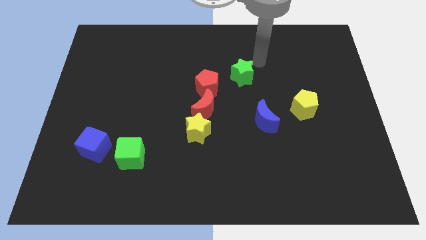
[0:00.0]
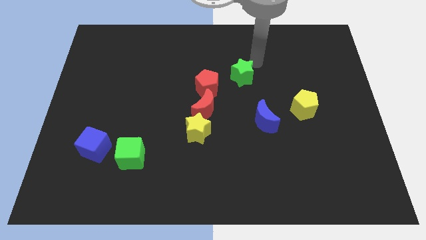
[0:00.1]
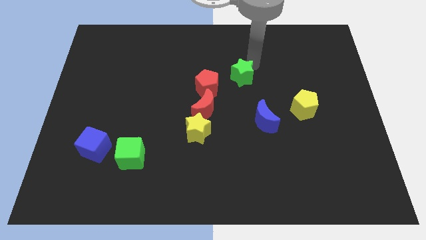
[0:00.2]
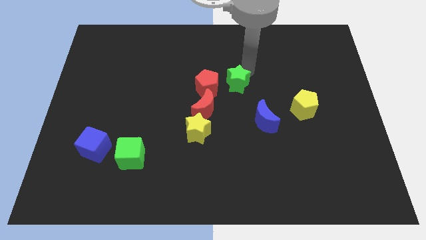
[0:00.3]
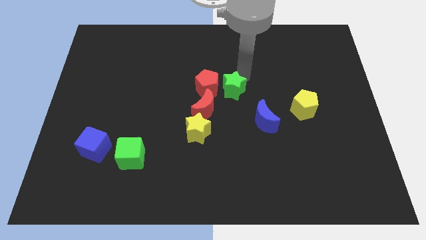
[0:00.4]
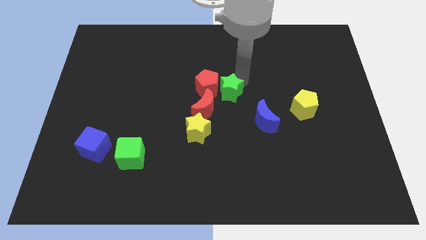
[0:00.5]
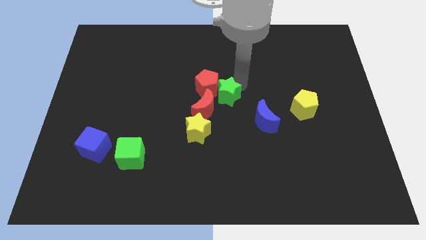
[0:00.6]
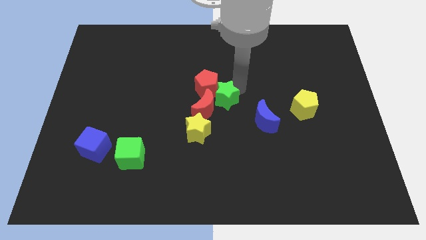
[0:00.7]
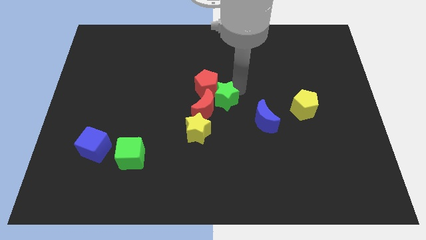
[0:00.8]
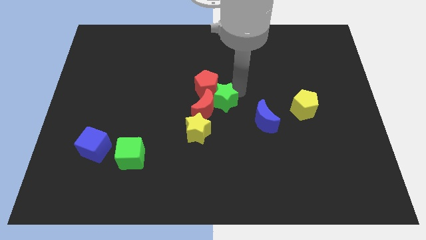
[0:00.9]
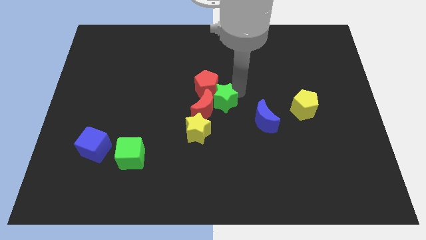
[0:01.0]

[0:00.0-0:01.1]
move the green star close to the right side of the group of red blocks

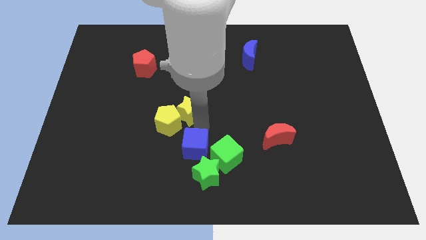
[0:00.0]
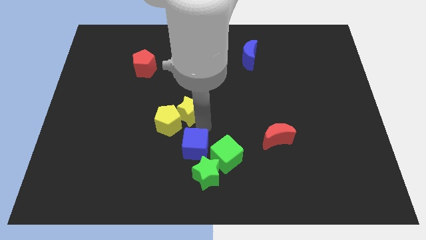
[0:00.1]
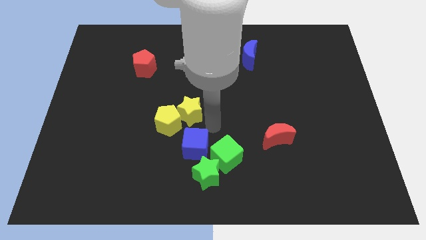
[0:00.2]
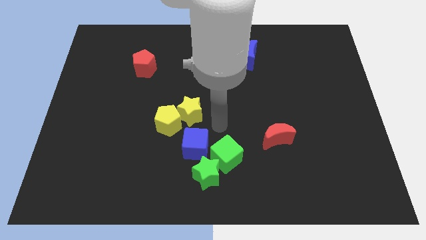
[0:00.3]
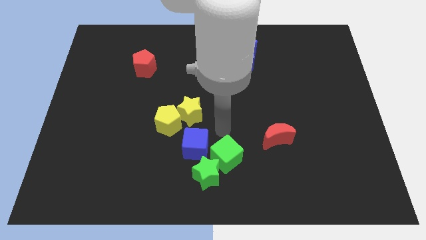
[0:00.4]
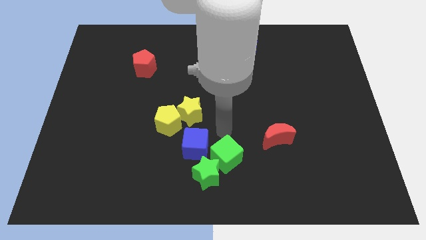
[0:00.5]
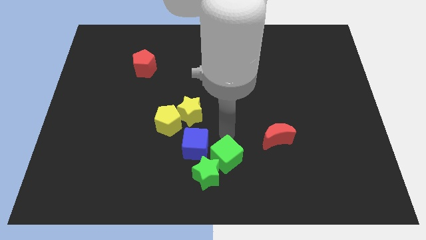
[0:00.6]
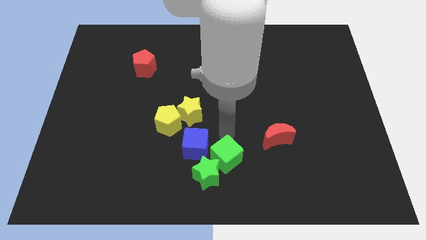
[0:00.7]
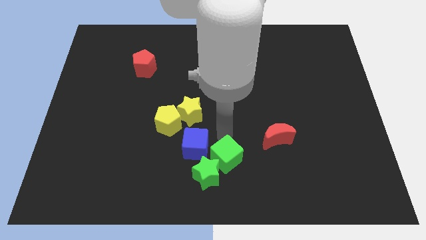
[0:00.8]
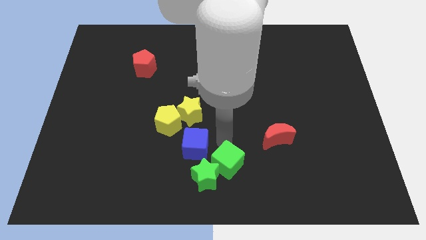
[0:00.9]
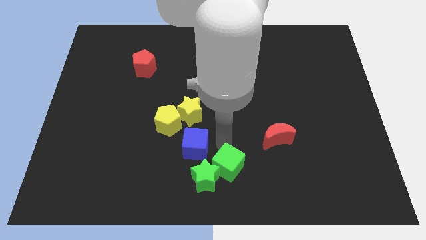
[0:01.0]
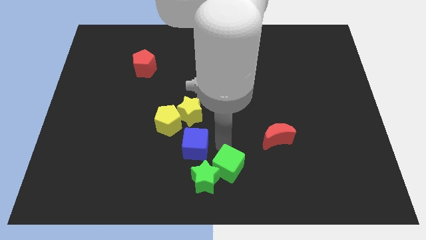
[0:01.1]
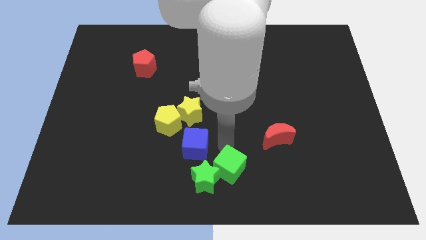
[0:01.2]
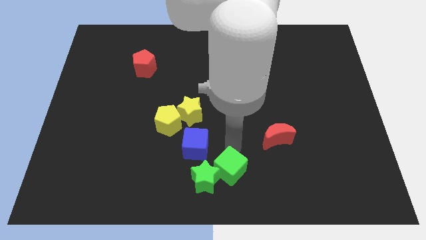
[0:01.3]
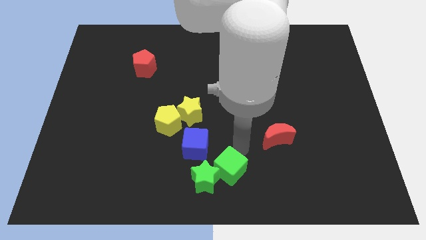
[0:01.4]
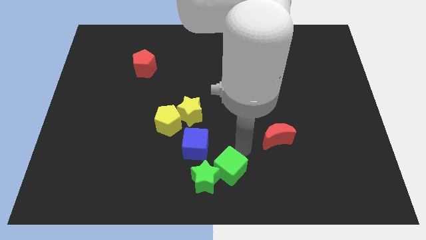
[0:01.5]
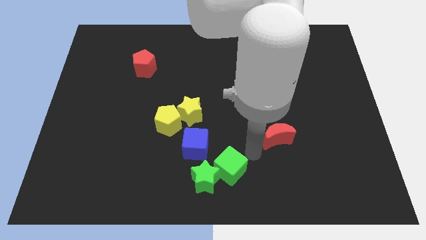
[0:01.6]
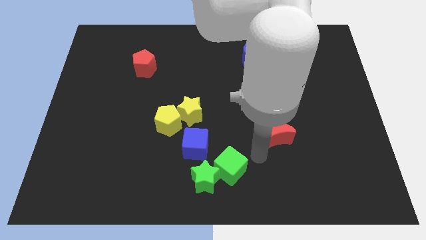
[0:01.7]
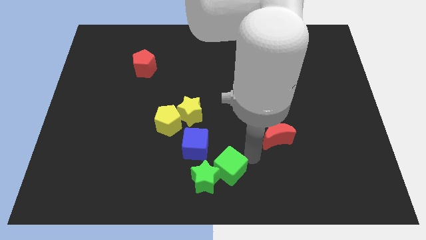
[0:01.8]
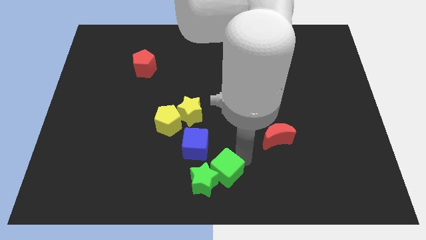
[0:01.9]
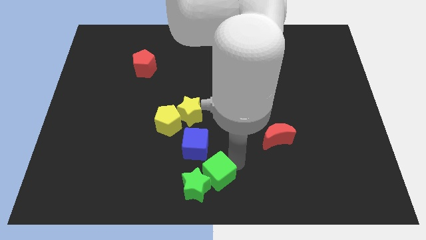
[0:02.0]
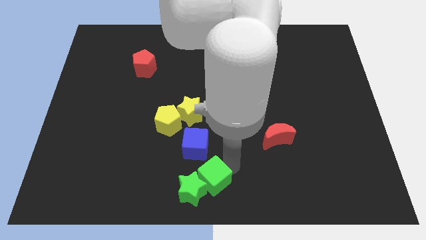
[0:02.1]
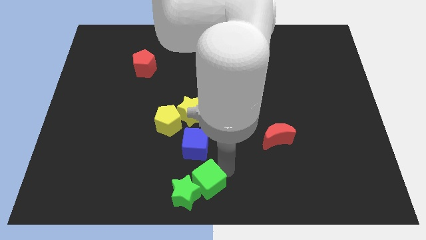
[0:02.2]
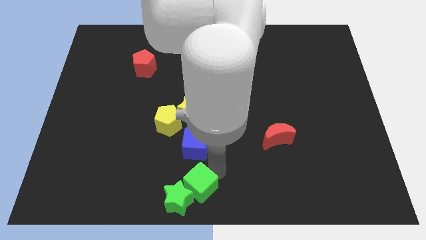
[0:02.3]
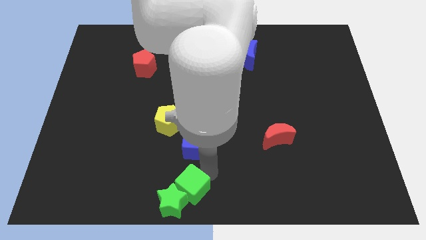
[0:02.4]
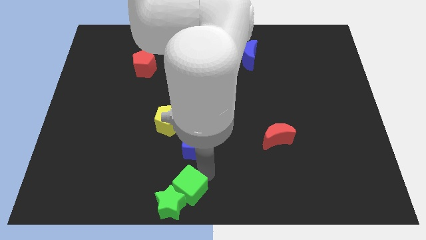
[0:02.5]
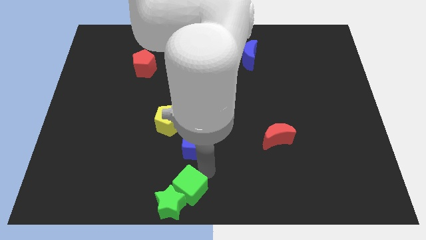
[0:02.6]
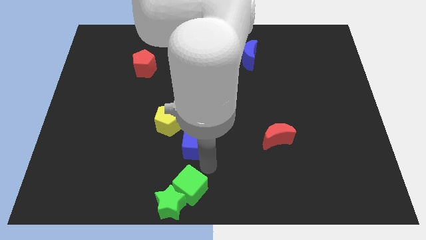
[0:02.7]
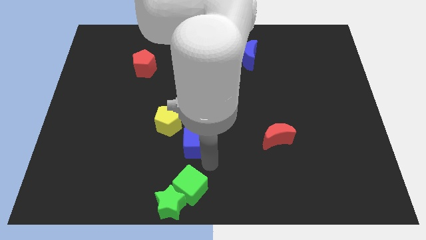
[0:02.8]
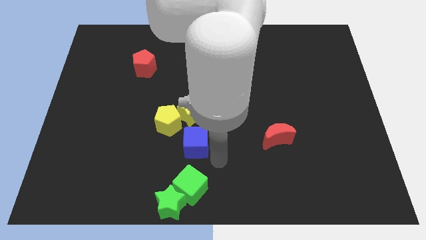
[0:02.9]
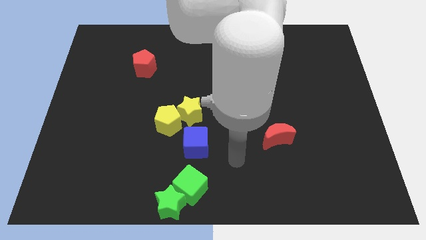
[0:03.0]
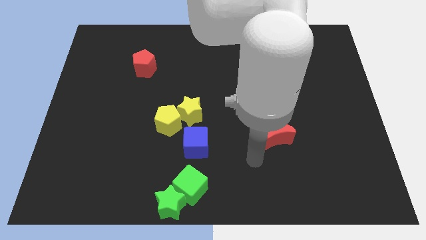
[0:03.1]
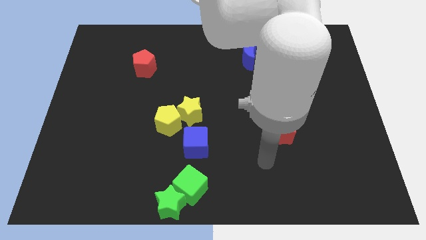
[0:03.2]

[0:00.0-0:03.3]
slide the green star and cube to the bottom side of the blue cube

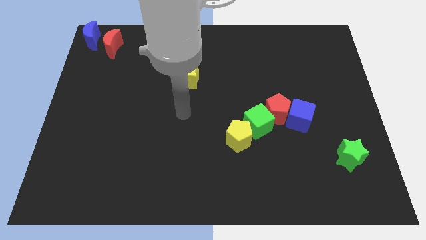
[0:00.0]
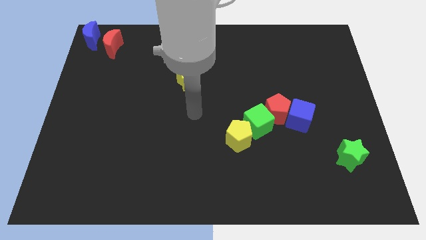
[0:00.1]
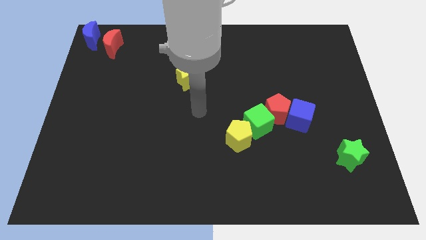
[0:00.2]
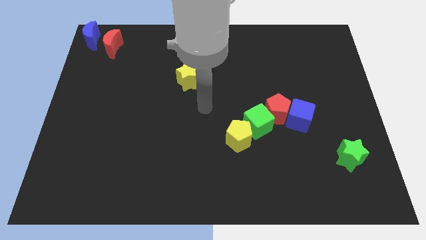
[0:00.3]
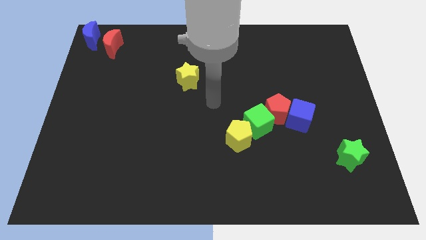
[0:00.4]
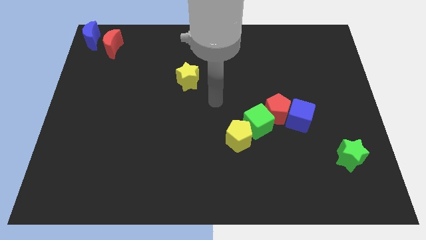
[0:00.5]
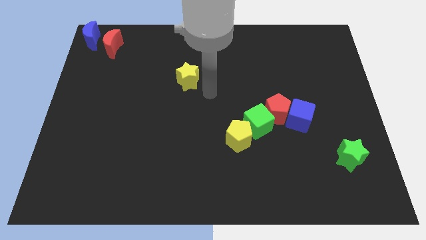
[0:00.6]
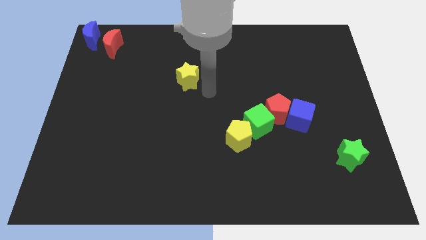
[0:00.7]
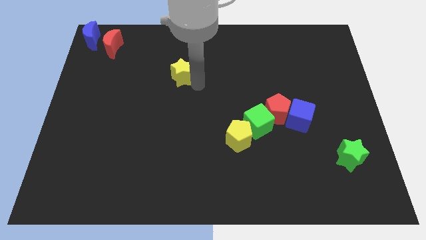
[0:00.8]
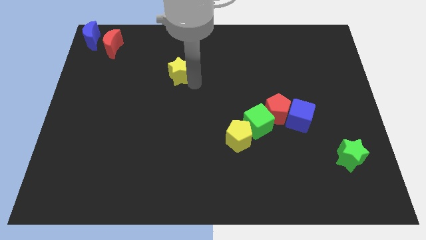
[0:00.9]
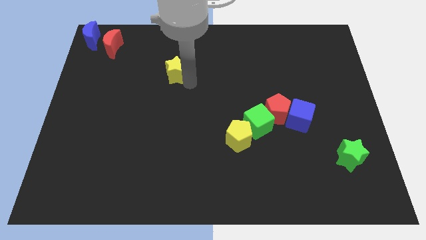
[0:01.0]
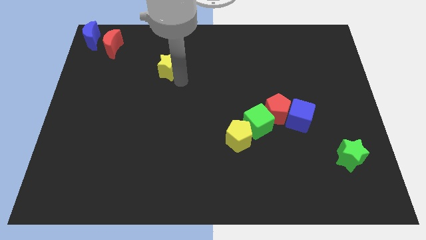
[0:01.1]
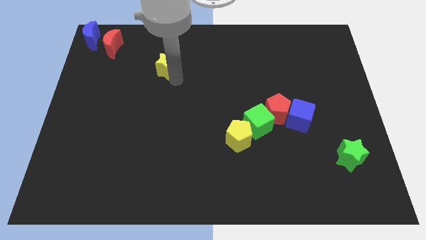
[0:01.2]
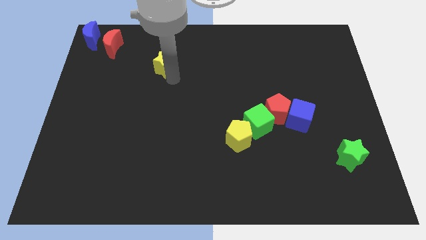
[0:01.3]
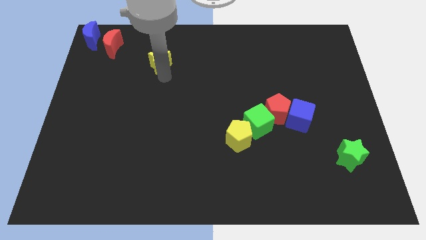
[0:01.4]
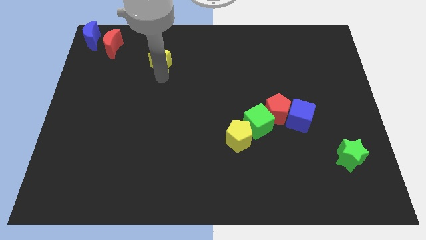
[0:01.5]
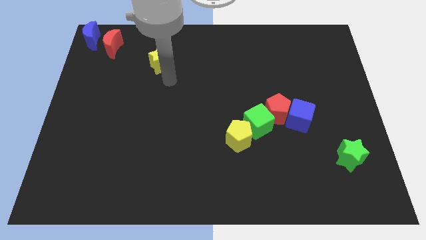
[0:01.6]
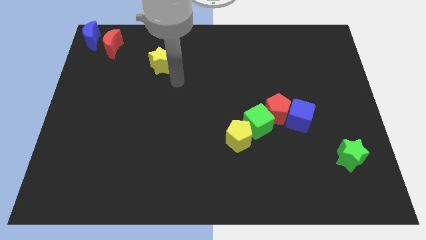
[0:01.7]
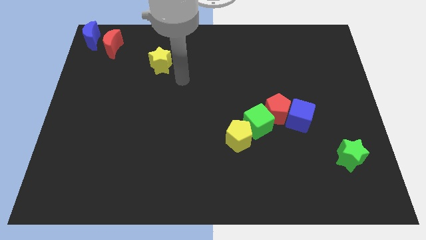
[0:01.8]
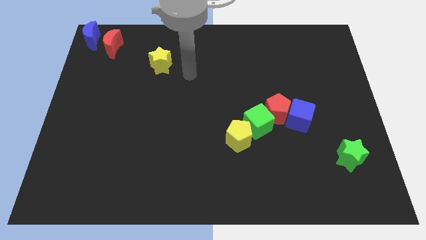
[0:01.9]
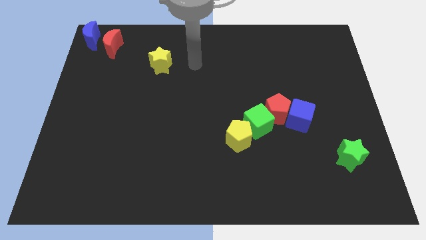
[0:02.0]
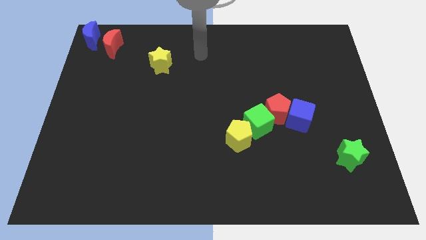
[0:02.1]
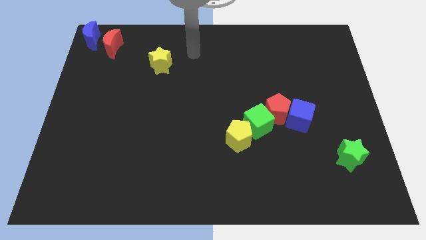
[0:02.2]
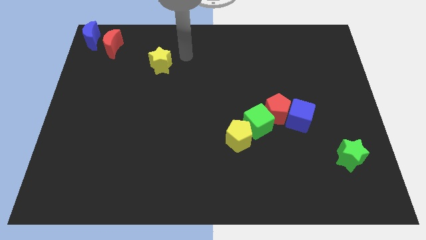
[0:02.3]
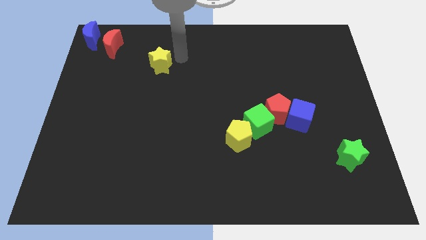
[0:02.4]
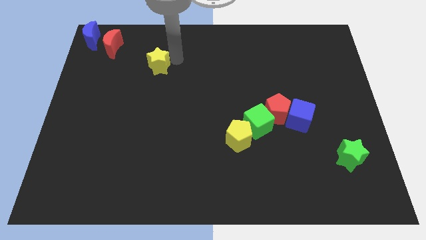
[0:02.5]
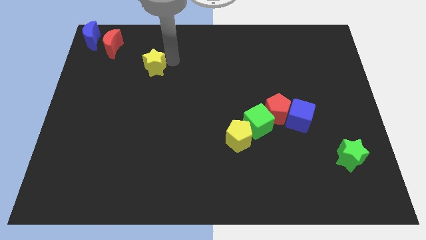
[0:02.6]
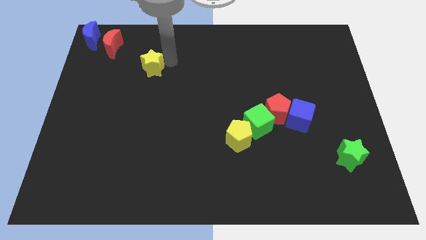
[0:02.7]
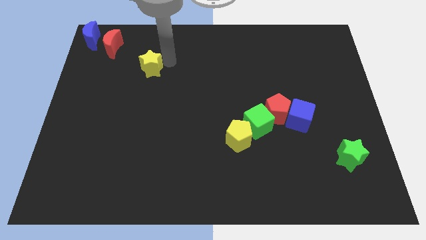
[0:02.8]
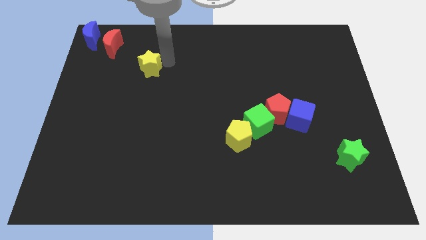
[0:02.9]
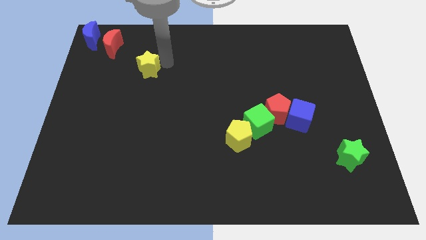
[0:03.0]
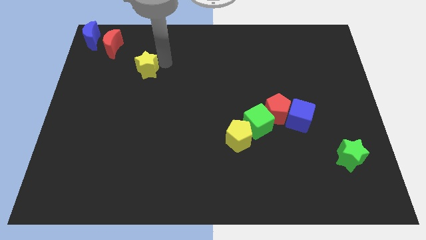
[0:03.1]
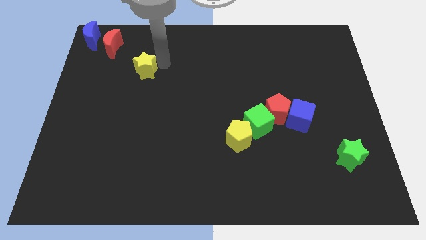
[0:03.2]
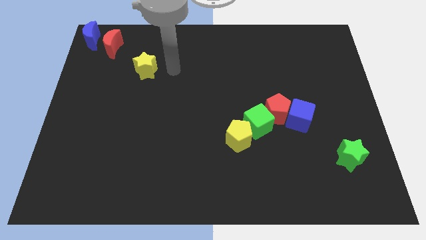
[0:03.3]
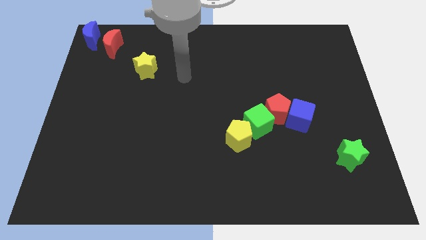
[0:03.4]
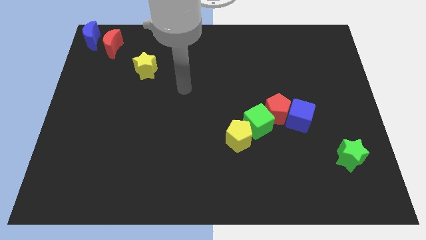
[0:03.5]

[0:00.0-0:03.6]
move yellow star to the left

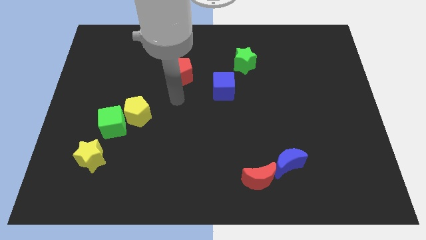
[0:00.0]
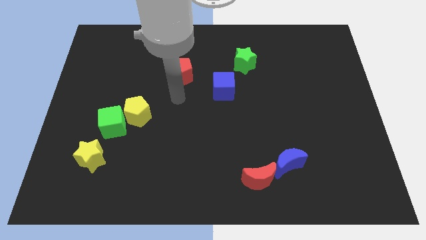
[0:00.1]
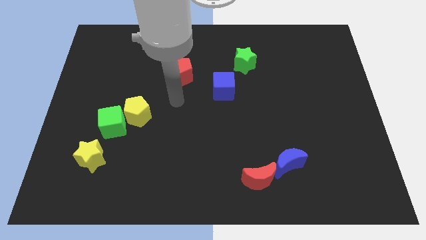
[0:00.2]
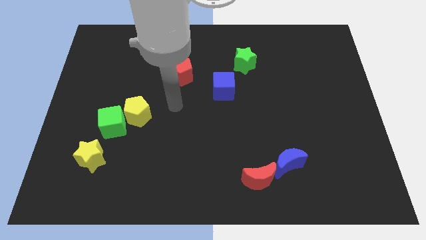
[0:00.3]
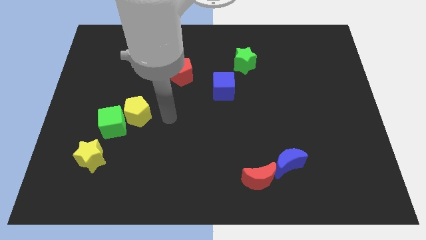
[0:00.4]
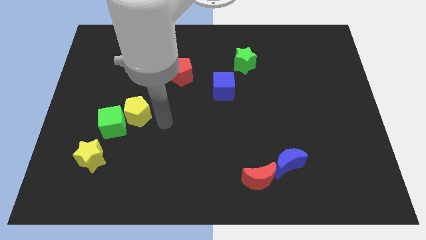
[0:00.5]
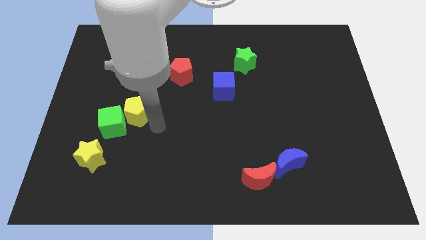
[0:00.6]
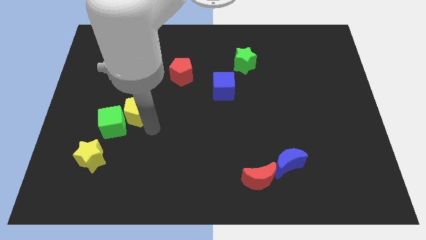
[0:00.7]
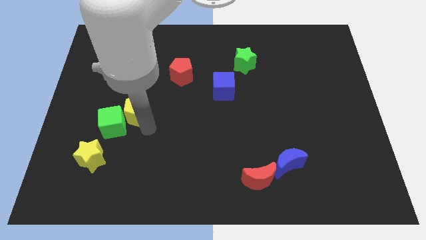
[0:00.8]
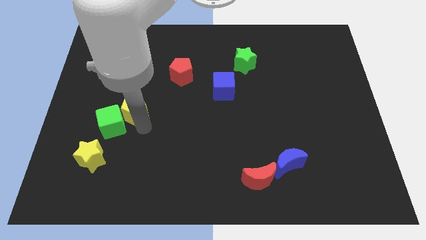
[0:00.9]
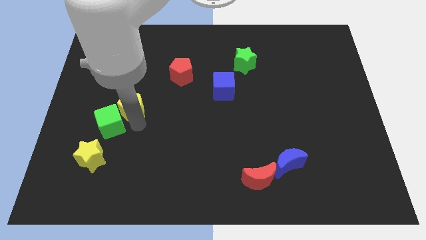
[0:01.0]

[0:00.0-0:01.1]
touch the yellow pentagon
